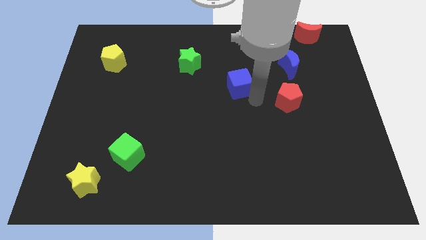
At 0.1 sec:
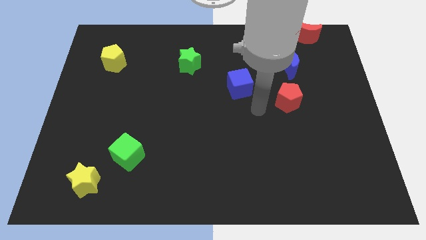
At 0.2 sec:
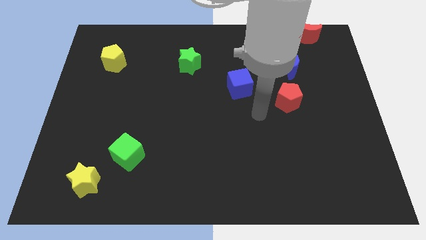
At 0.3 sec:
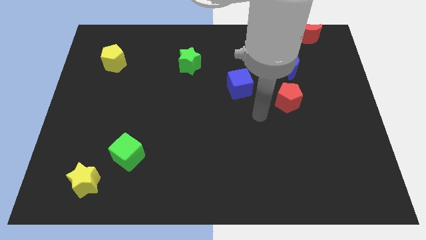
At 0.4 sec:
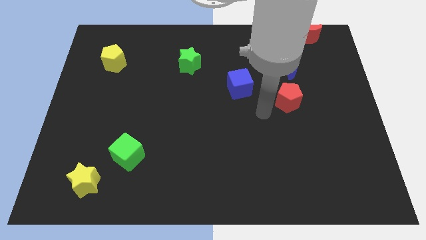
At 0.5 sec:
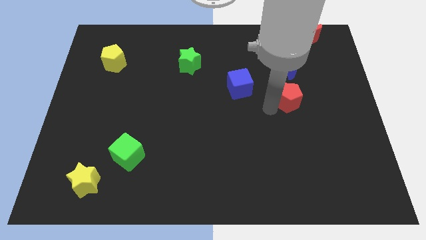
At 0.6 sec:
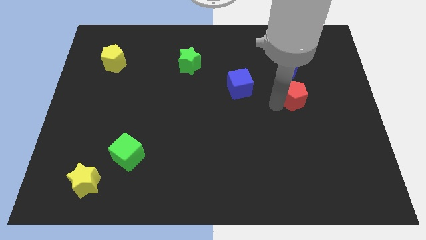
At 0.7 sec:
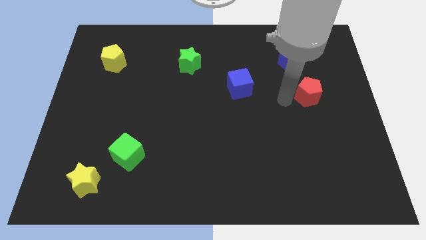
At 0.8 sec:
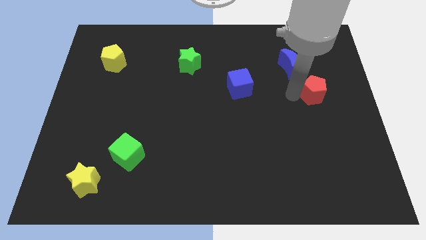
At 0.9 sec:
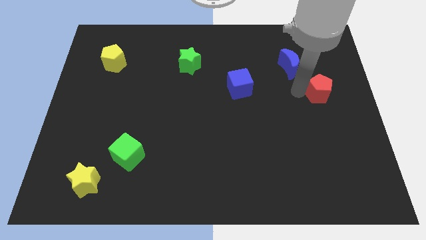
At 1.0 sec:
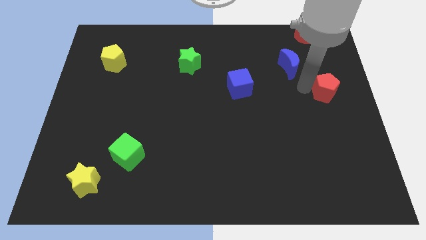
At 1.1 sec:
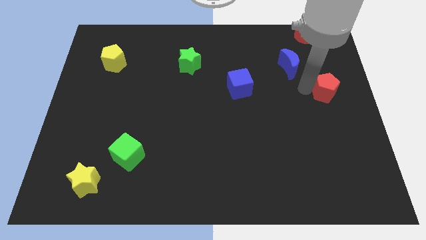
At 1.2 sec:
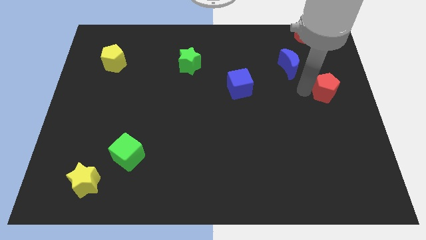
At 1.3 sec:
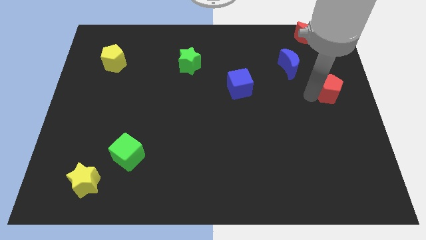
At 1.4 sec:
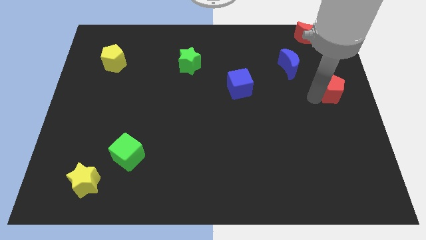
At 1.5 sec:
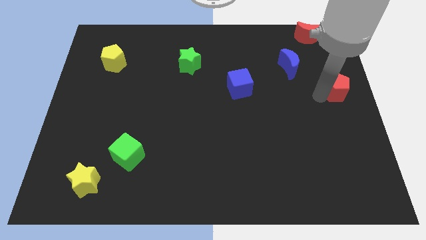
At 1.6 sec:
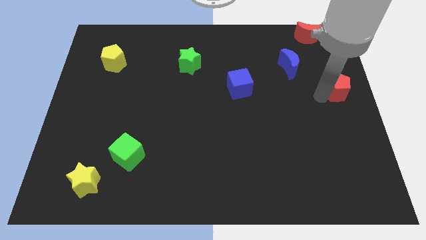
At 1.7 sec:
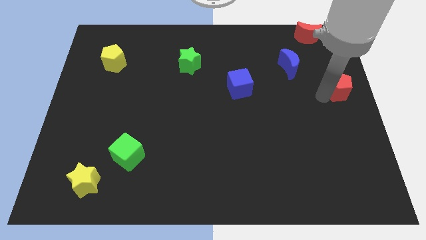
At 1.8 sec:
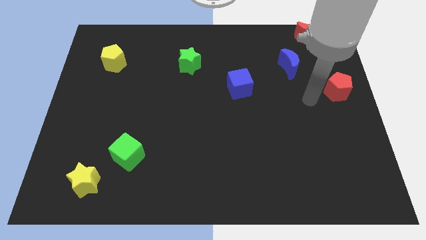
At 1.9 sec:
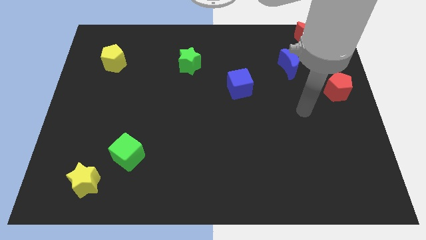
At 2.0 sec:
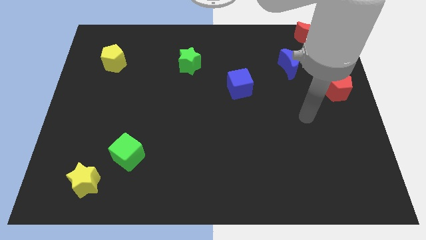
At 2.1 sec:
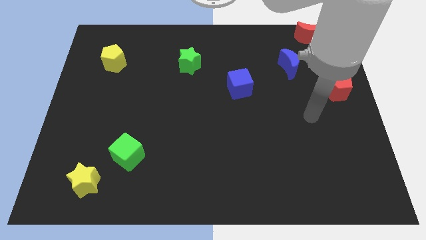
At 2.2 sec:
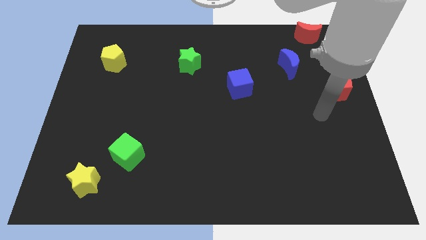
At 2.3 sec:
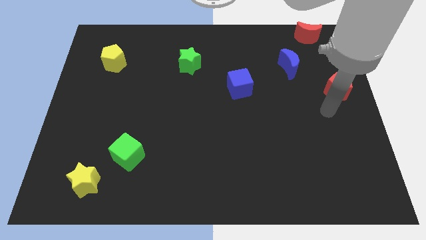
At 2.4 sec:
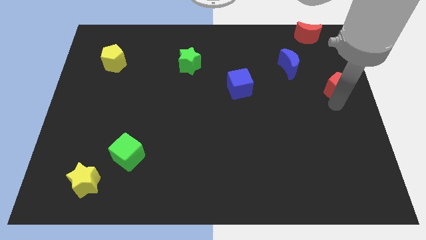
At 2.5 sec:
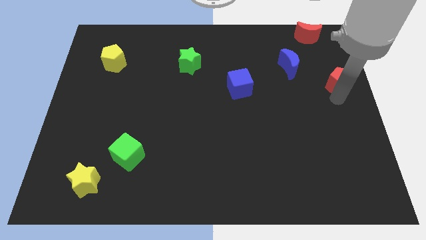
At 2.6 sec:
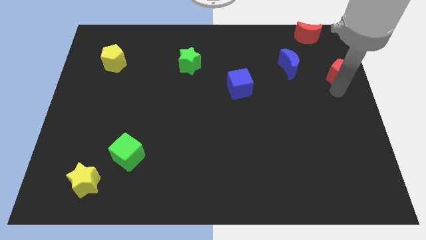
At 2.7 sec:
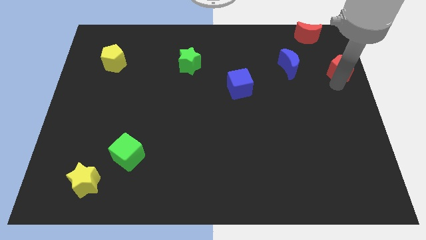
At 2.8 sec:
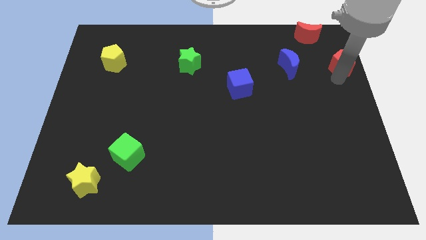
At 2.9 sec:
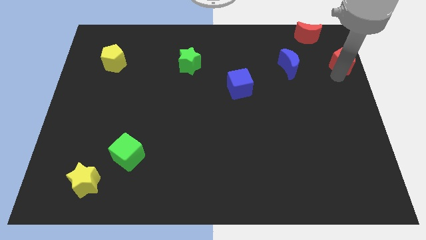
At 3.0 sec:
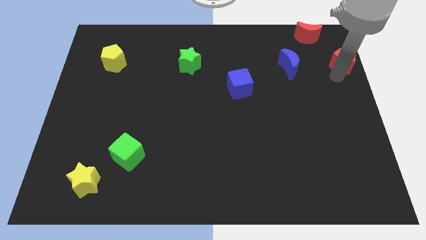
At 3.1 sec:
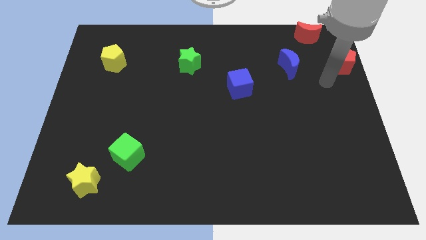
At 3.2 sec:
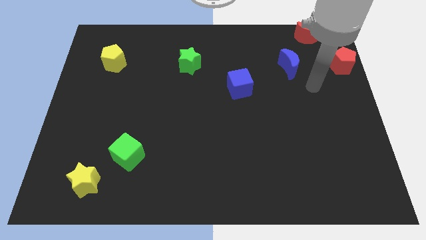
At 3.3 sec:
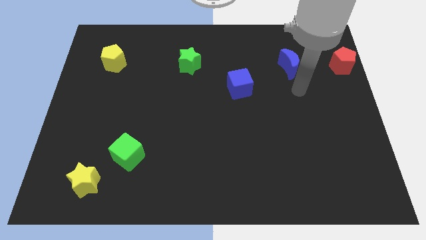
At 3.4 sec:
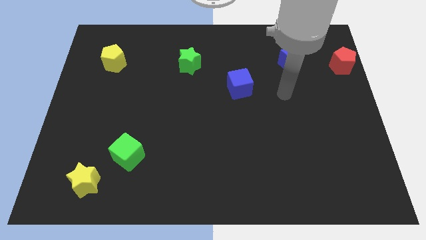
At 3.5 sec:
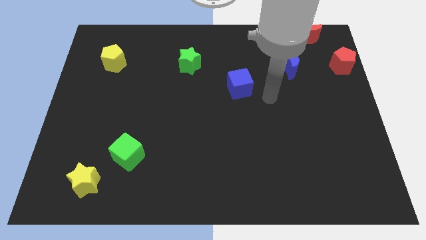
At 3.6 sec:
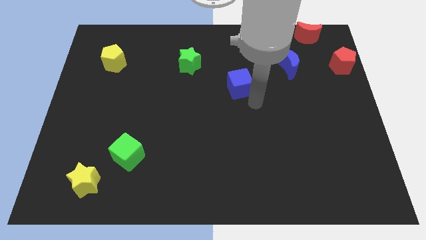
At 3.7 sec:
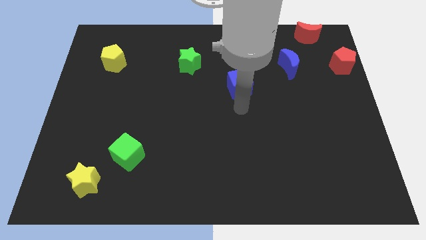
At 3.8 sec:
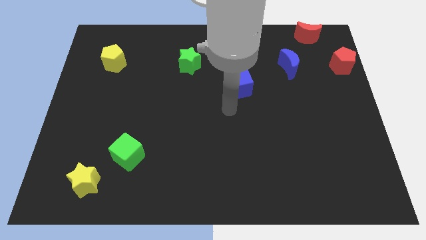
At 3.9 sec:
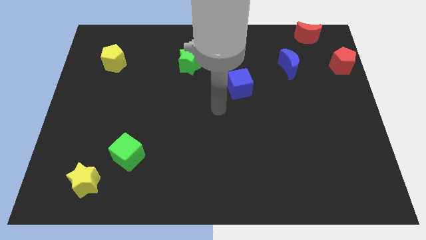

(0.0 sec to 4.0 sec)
move the red pentagon towards the red moon

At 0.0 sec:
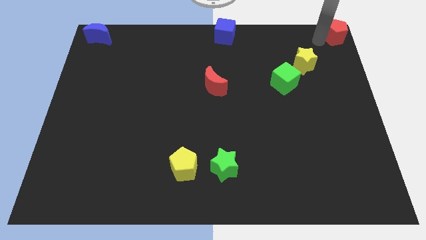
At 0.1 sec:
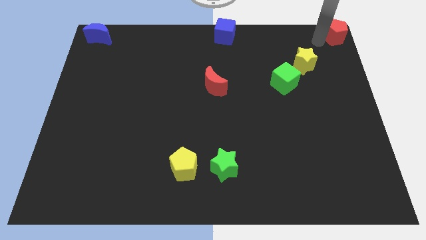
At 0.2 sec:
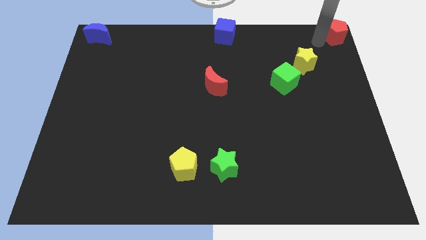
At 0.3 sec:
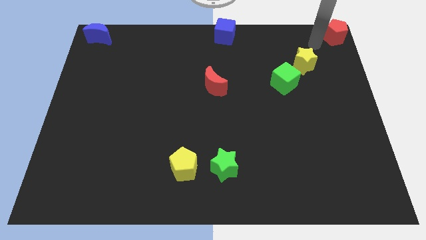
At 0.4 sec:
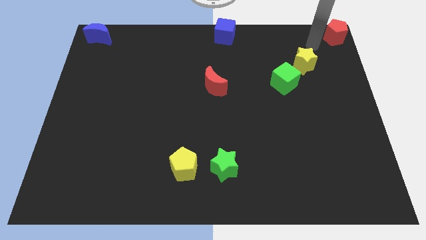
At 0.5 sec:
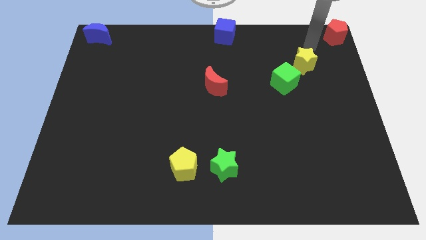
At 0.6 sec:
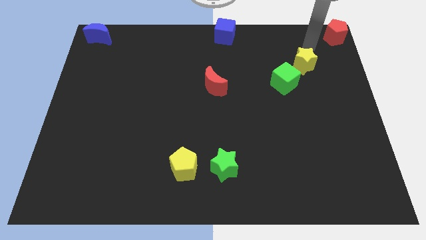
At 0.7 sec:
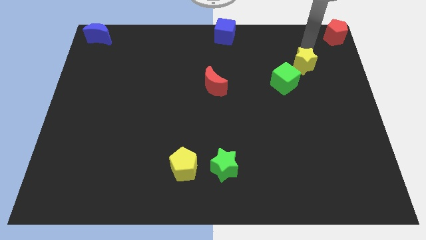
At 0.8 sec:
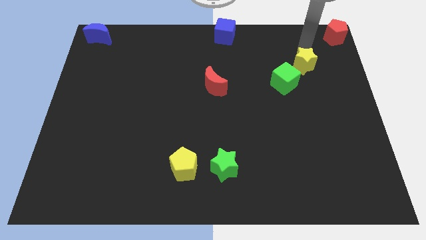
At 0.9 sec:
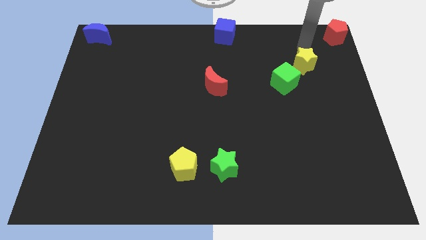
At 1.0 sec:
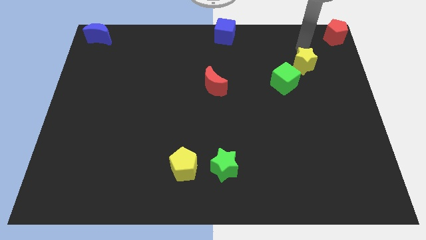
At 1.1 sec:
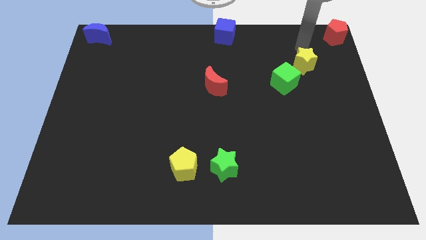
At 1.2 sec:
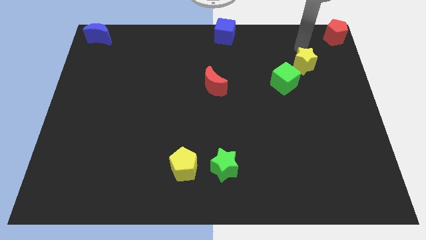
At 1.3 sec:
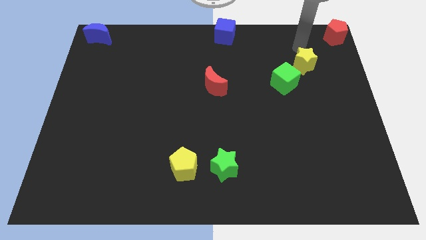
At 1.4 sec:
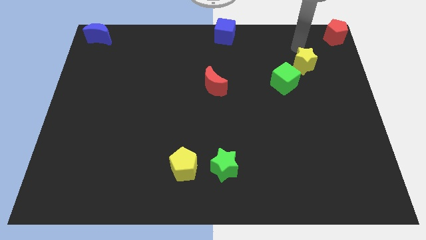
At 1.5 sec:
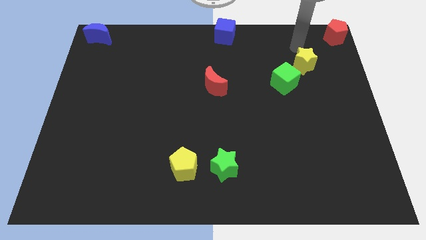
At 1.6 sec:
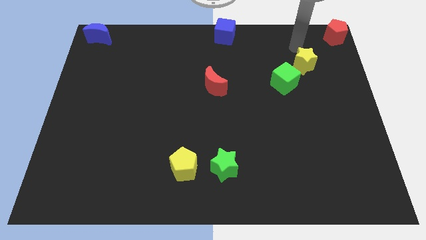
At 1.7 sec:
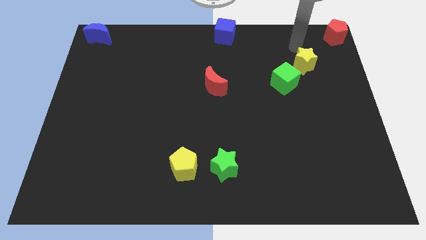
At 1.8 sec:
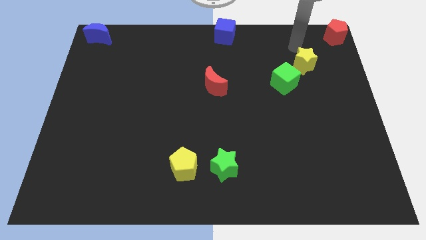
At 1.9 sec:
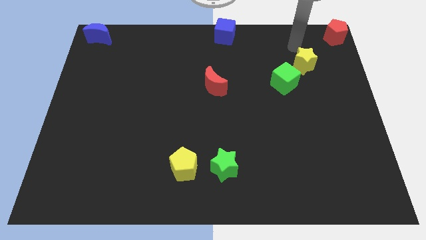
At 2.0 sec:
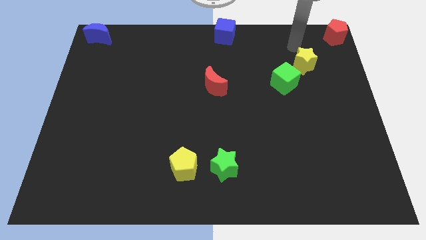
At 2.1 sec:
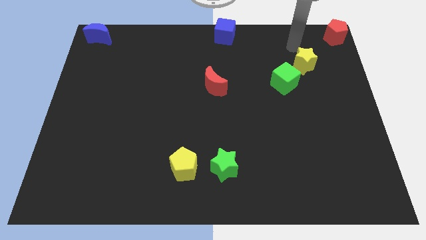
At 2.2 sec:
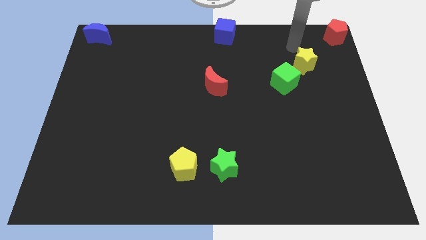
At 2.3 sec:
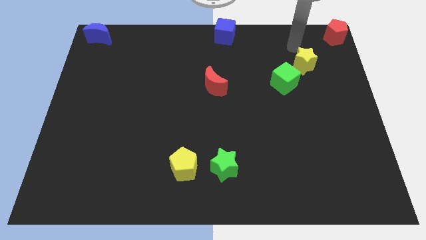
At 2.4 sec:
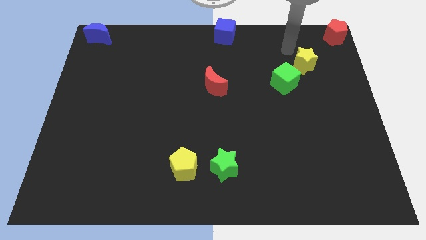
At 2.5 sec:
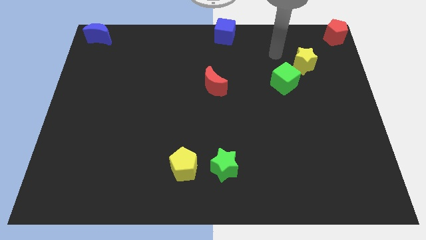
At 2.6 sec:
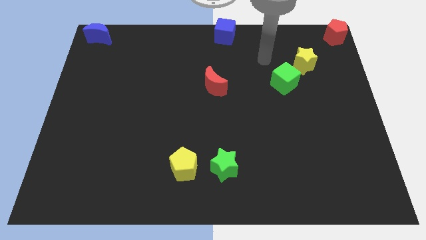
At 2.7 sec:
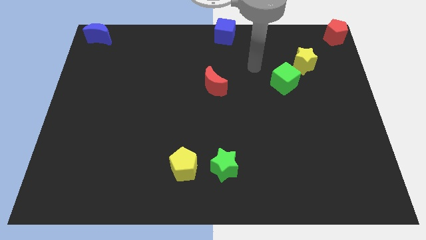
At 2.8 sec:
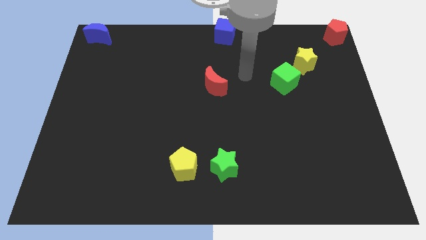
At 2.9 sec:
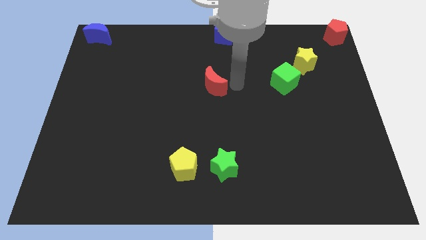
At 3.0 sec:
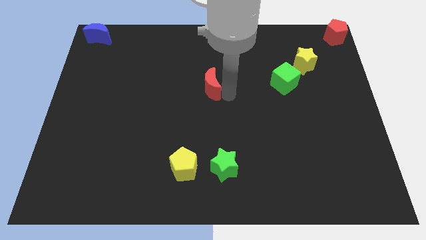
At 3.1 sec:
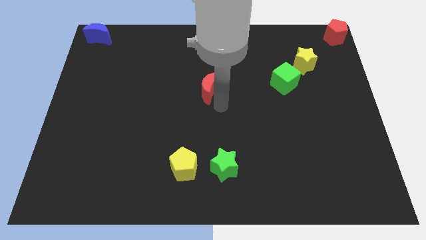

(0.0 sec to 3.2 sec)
go away from the red pentagon

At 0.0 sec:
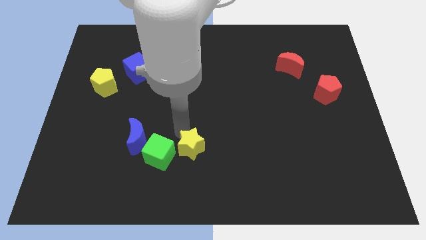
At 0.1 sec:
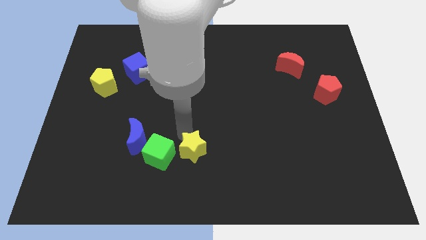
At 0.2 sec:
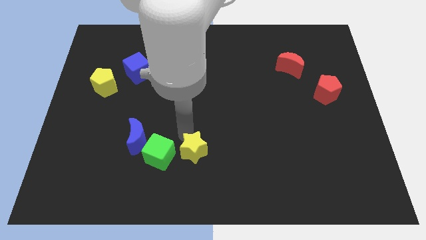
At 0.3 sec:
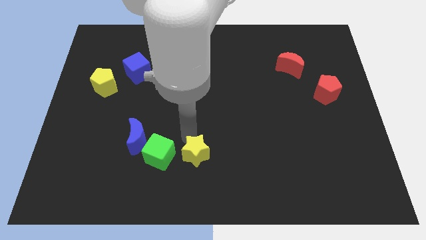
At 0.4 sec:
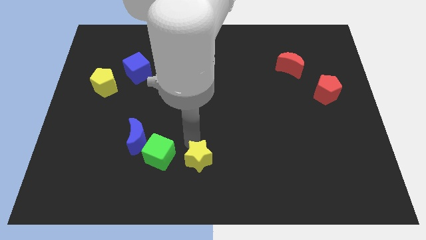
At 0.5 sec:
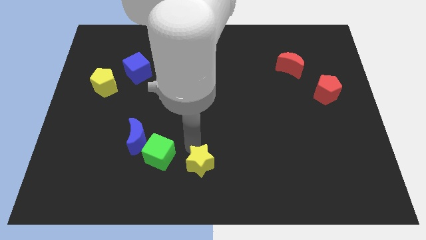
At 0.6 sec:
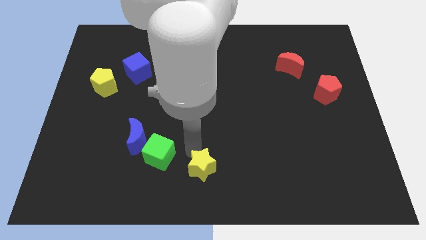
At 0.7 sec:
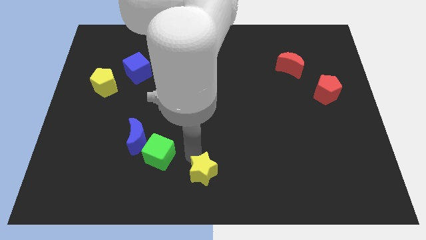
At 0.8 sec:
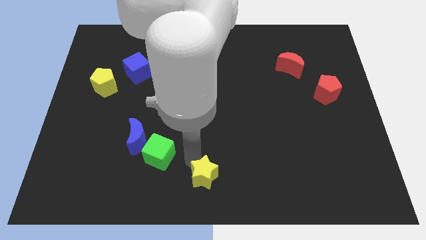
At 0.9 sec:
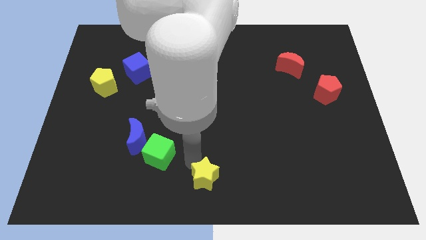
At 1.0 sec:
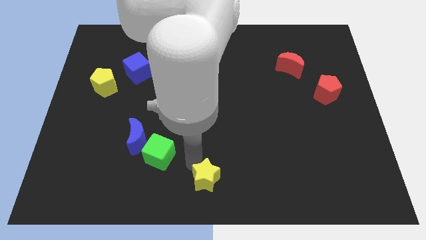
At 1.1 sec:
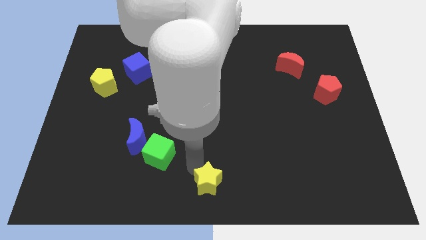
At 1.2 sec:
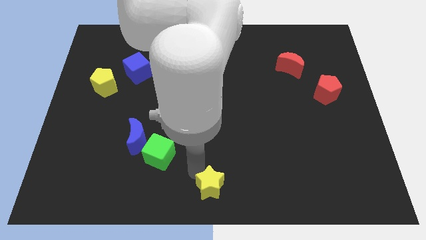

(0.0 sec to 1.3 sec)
move the yellow star to the bottom center of the board

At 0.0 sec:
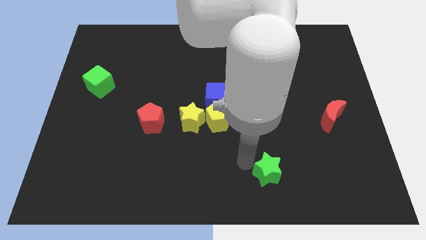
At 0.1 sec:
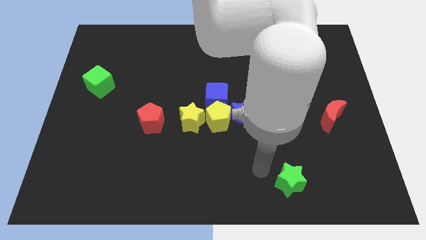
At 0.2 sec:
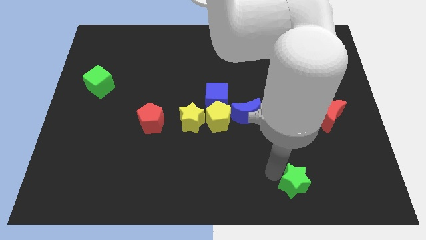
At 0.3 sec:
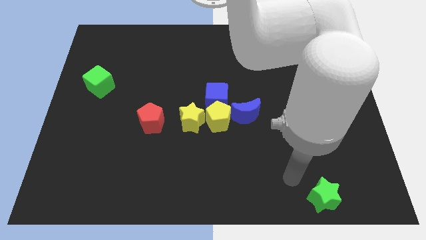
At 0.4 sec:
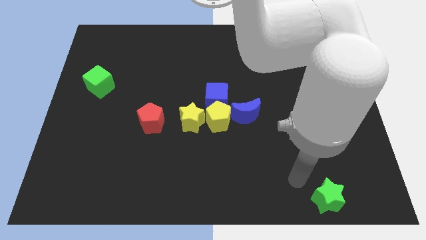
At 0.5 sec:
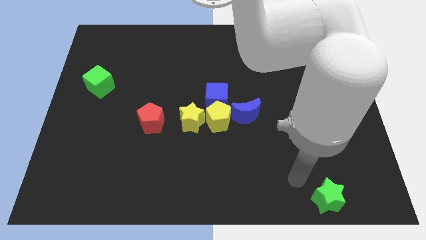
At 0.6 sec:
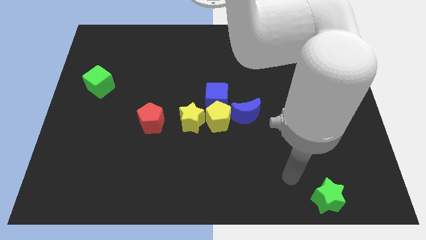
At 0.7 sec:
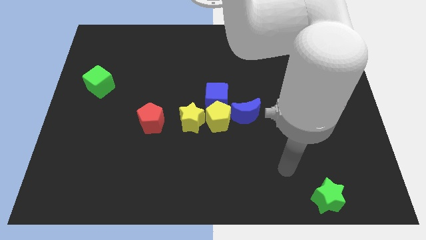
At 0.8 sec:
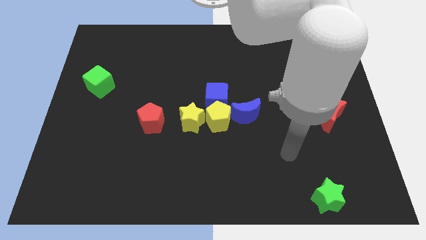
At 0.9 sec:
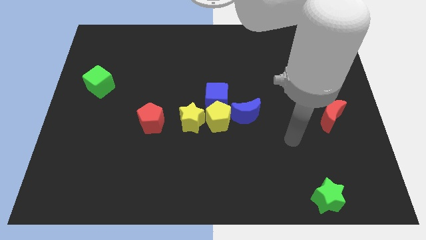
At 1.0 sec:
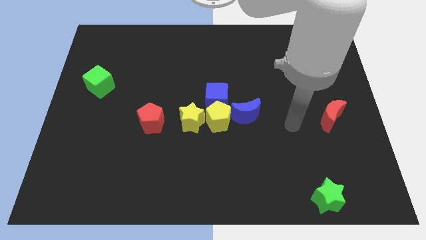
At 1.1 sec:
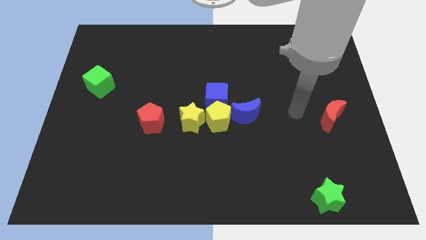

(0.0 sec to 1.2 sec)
push the star to the bottom side
